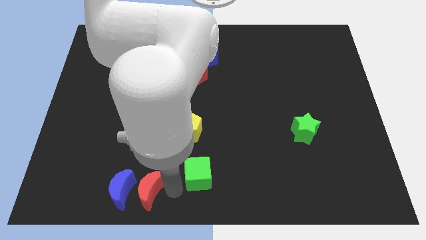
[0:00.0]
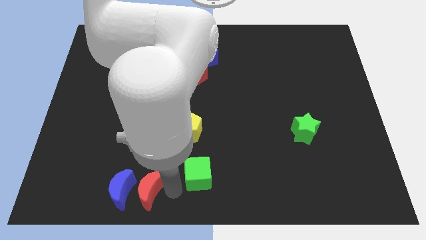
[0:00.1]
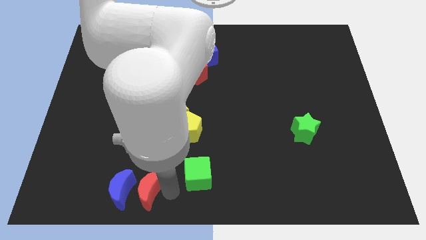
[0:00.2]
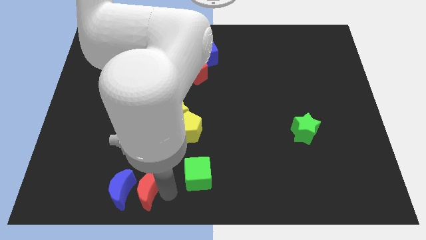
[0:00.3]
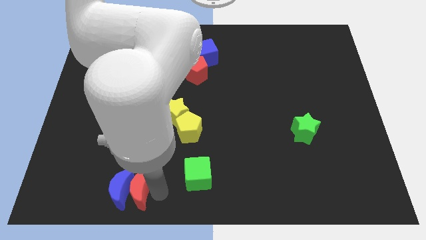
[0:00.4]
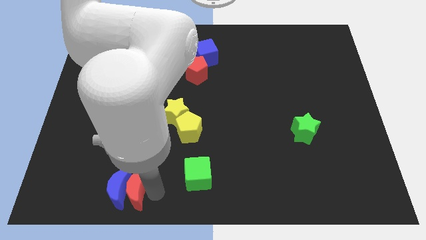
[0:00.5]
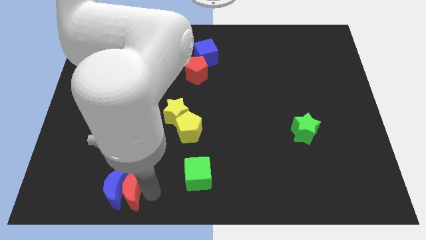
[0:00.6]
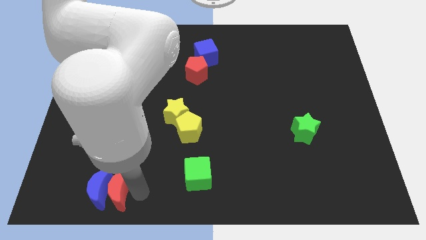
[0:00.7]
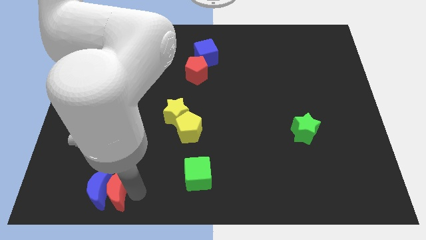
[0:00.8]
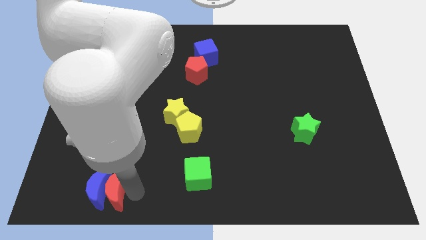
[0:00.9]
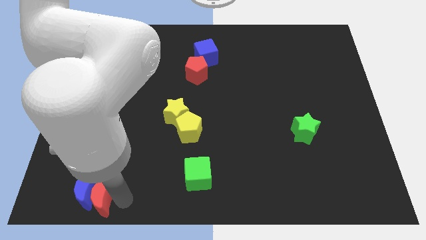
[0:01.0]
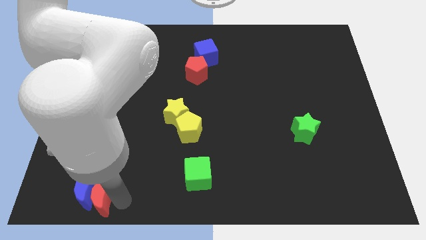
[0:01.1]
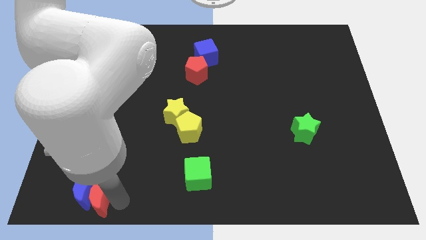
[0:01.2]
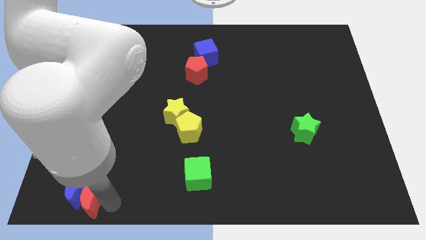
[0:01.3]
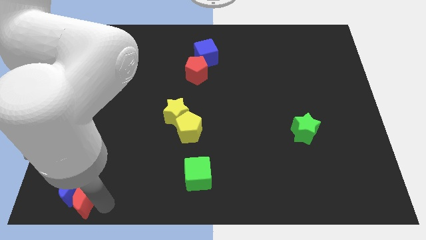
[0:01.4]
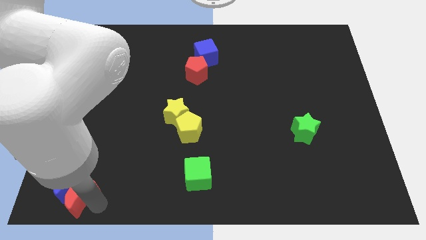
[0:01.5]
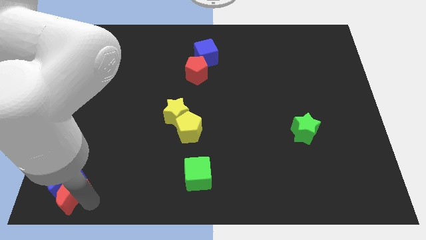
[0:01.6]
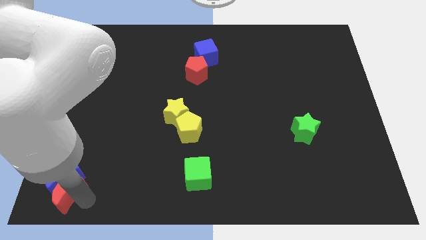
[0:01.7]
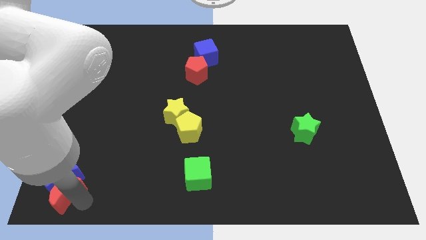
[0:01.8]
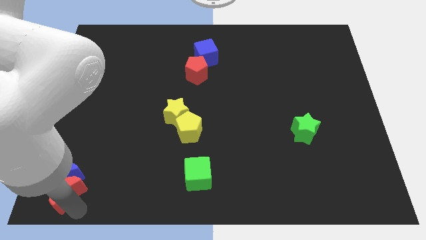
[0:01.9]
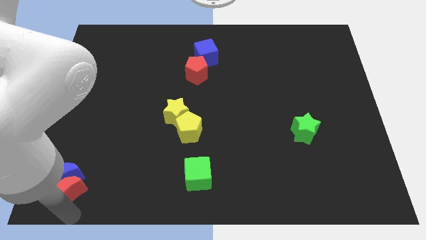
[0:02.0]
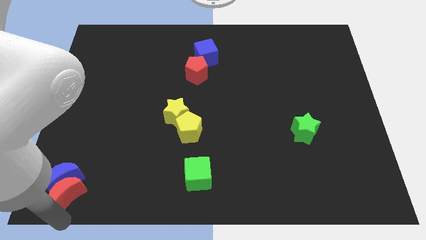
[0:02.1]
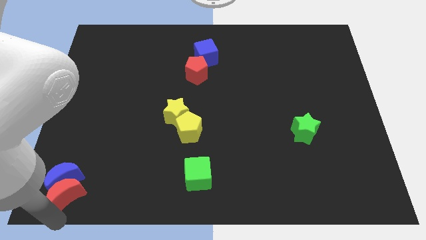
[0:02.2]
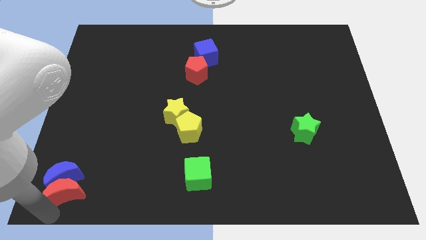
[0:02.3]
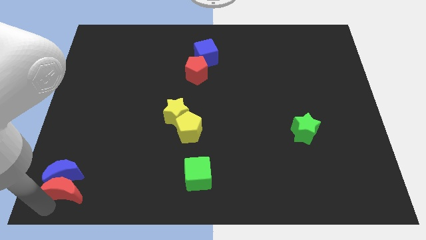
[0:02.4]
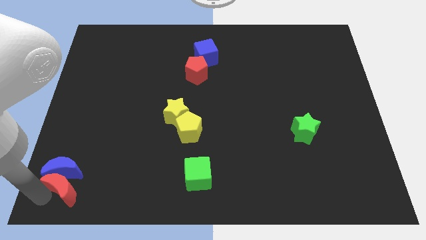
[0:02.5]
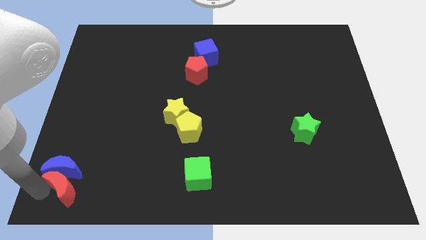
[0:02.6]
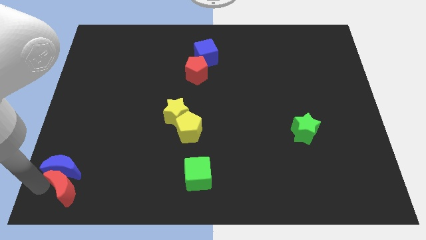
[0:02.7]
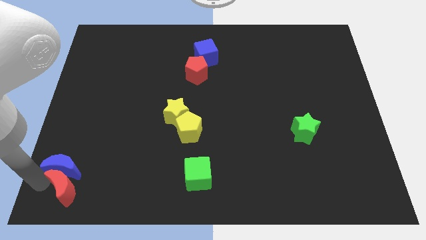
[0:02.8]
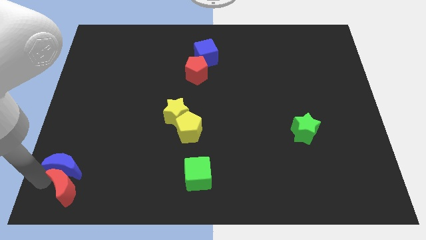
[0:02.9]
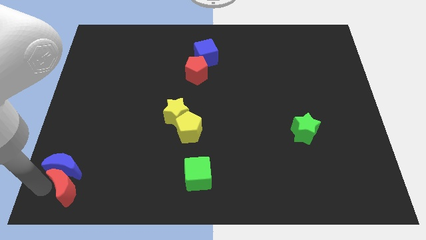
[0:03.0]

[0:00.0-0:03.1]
move red moon bottom left side

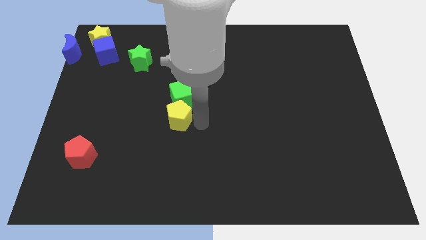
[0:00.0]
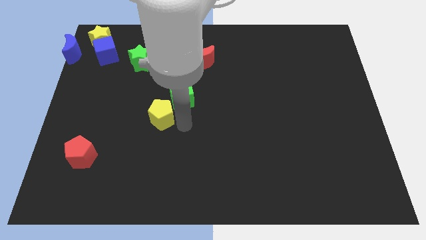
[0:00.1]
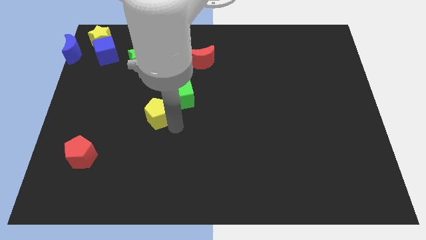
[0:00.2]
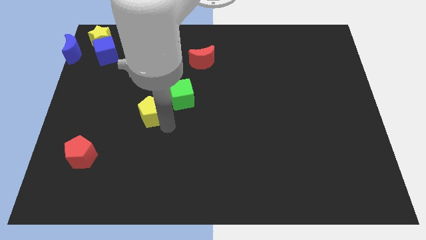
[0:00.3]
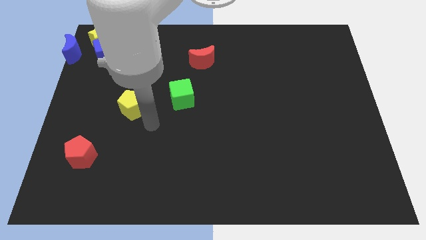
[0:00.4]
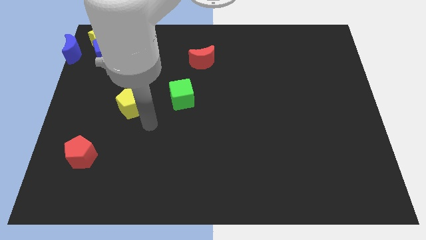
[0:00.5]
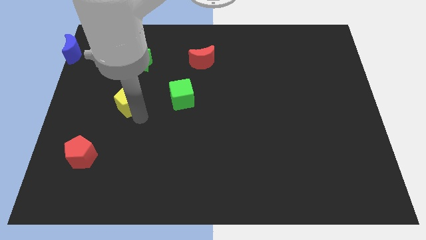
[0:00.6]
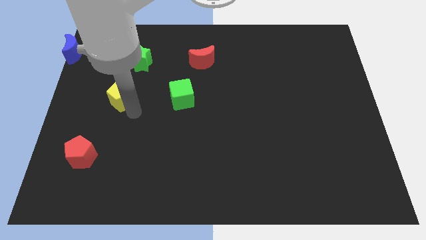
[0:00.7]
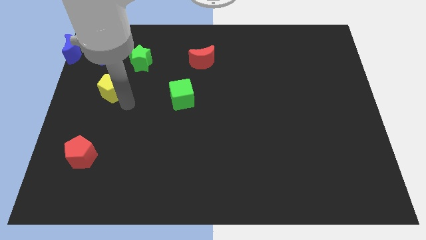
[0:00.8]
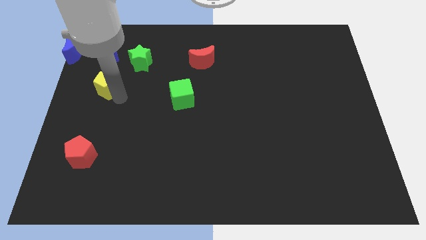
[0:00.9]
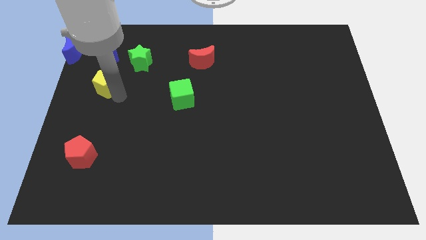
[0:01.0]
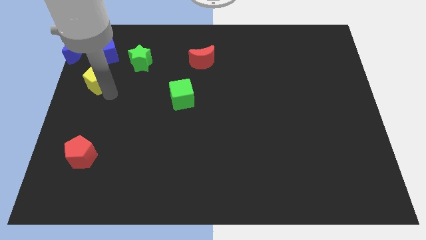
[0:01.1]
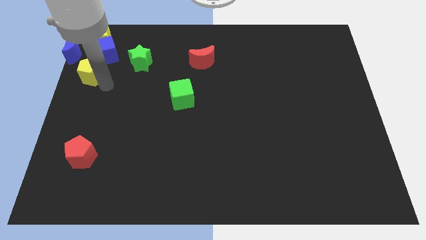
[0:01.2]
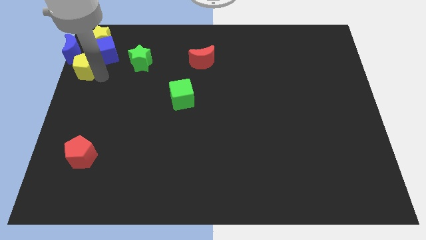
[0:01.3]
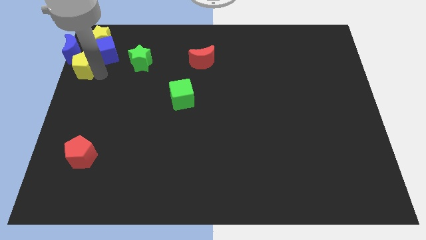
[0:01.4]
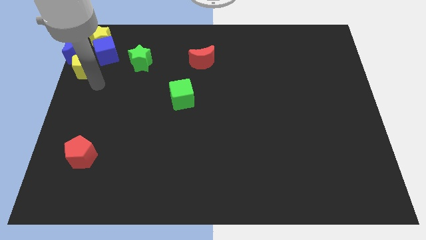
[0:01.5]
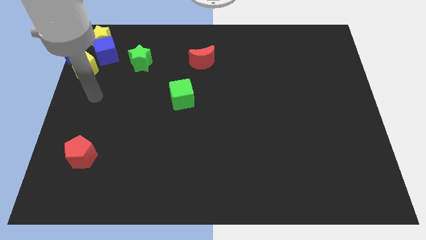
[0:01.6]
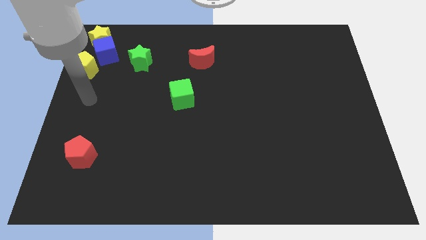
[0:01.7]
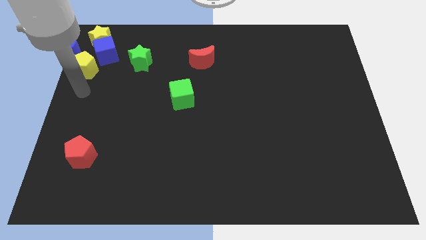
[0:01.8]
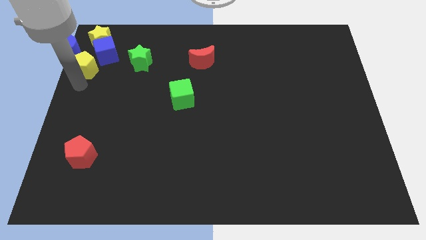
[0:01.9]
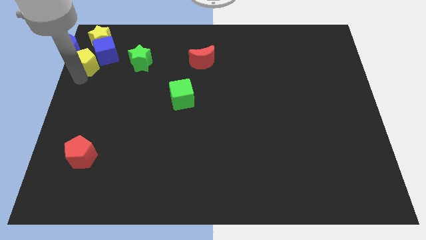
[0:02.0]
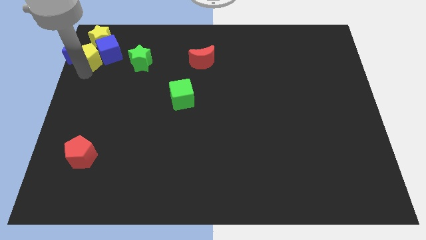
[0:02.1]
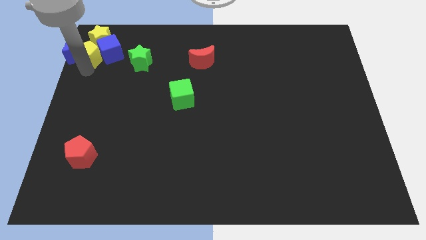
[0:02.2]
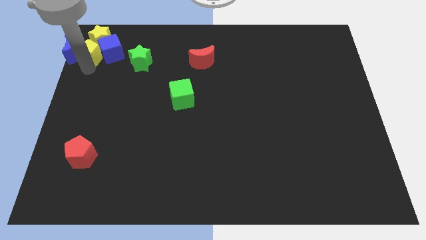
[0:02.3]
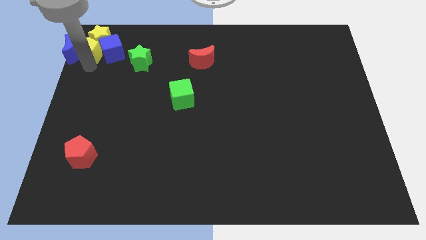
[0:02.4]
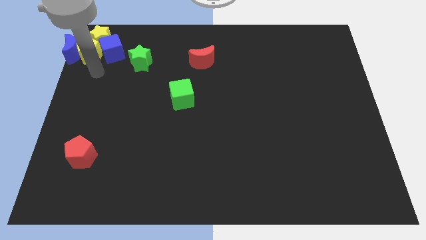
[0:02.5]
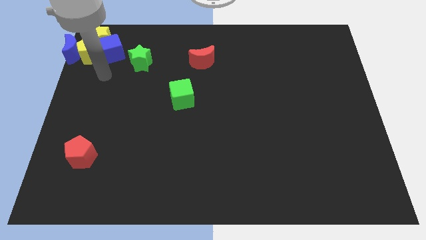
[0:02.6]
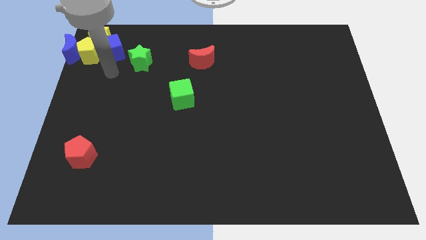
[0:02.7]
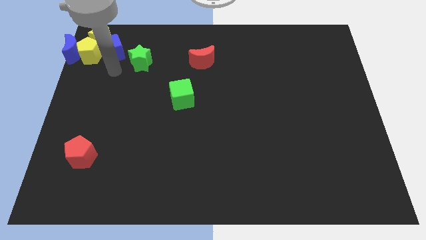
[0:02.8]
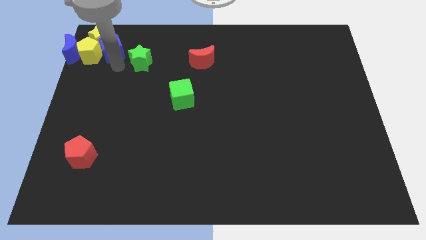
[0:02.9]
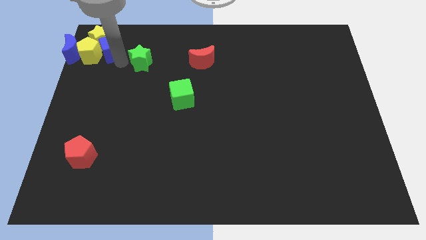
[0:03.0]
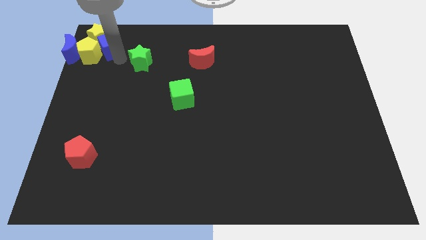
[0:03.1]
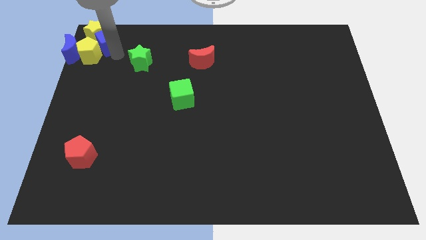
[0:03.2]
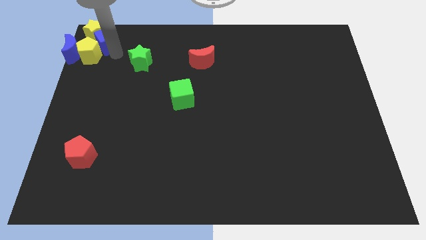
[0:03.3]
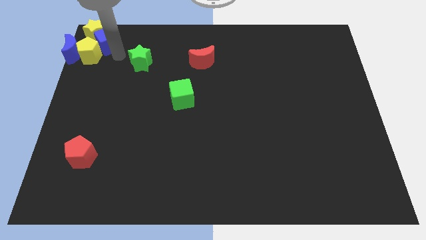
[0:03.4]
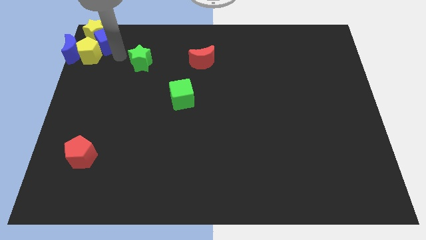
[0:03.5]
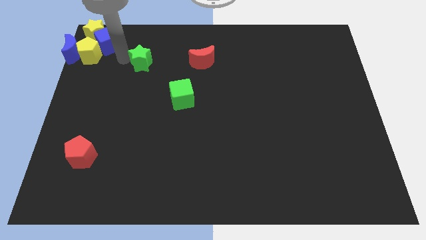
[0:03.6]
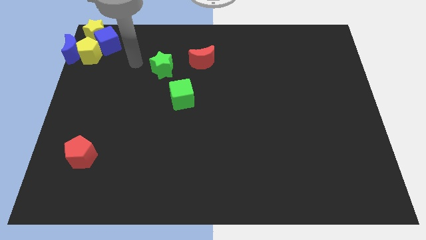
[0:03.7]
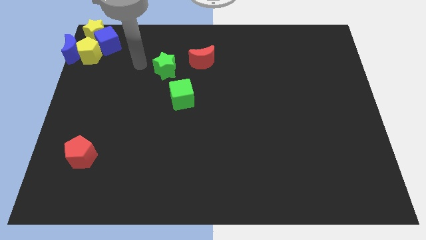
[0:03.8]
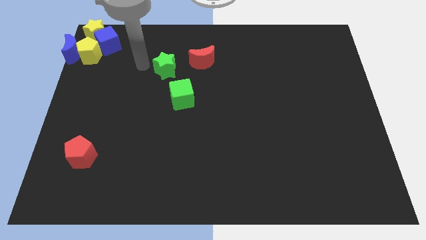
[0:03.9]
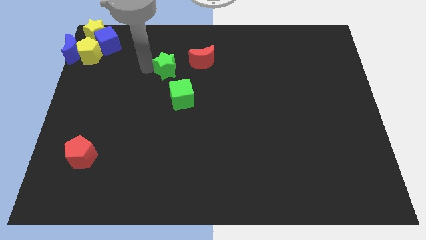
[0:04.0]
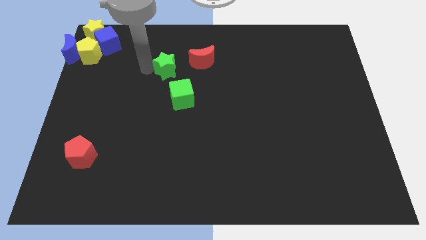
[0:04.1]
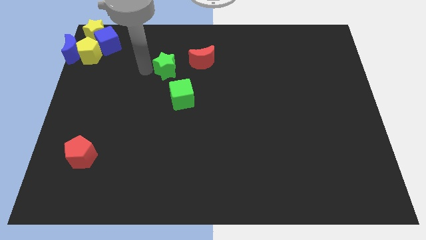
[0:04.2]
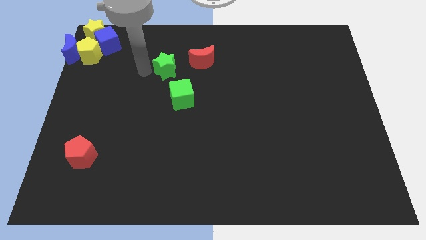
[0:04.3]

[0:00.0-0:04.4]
place the green star left to the red moon

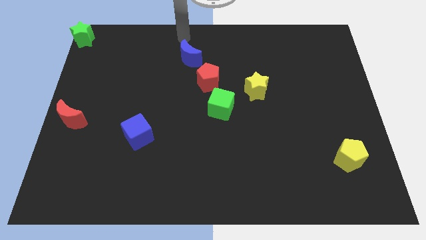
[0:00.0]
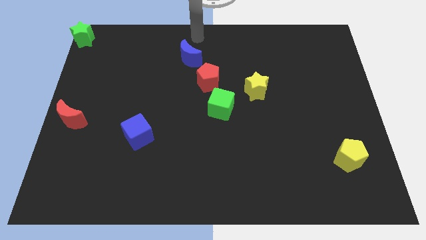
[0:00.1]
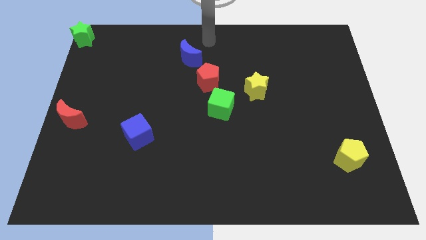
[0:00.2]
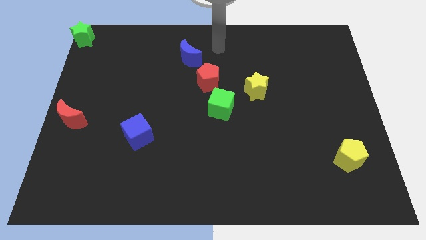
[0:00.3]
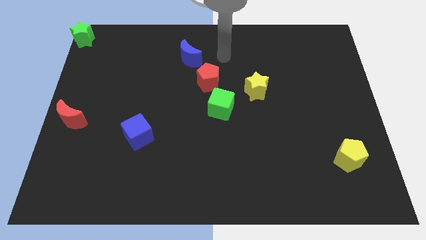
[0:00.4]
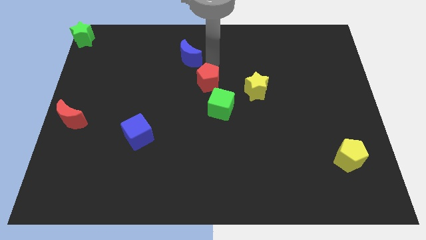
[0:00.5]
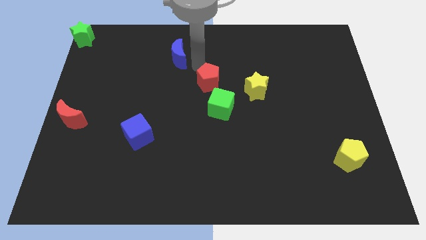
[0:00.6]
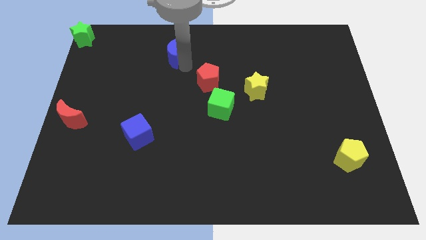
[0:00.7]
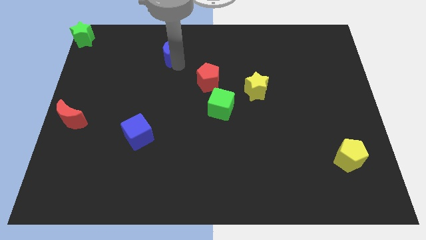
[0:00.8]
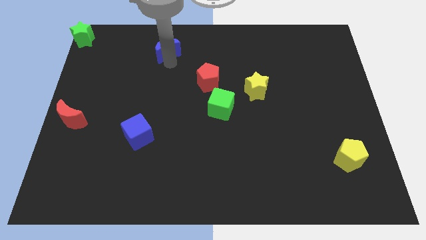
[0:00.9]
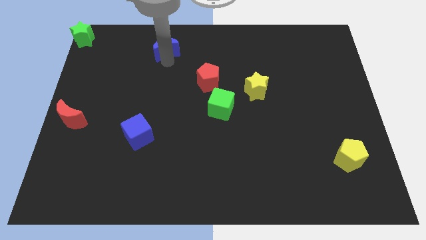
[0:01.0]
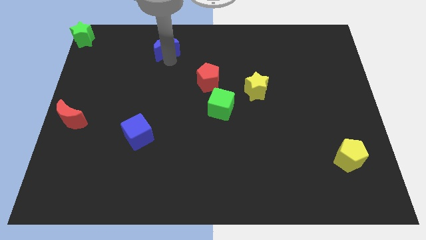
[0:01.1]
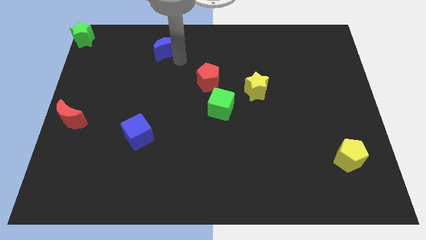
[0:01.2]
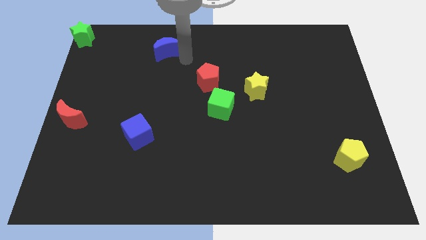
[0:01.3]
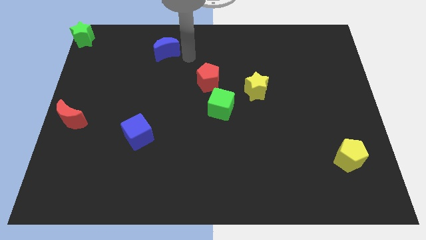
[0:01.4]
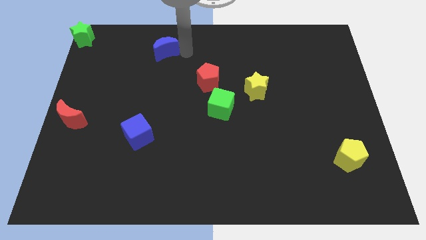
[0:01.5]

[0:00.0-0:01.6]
move the blue moon to the left side
